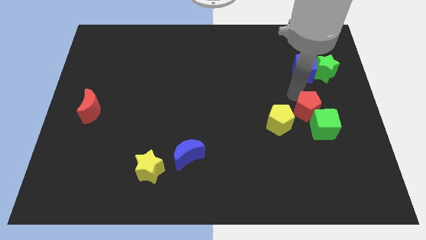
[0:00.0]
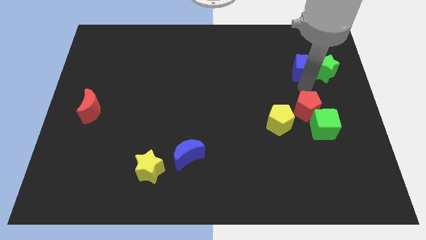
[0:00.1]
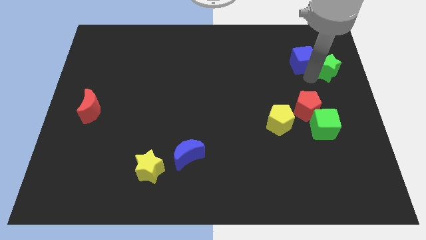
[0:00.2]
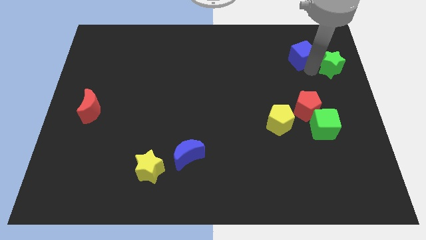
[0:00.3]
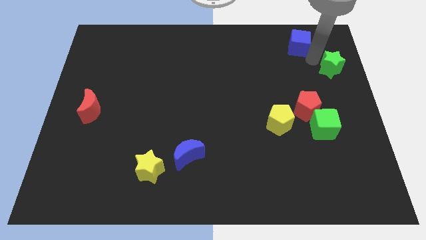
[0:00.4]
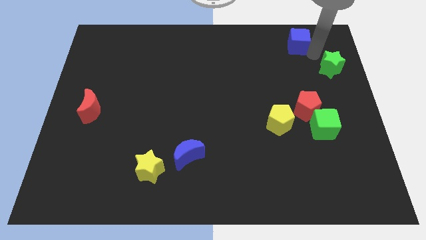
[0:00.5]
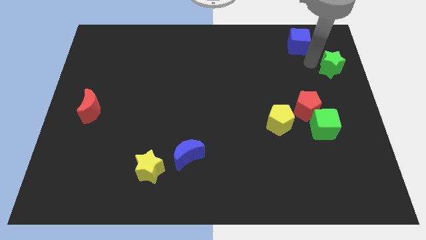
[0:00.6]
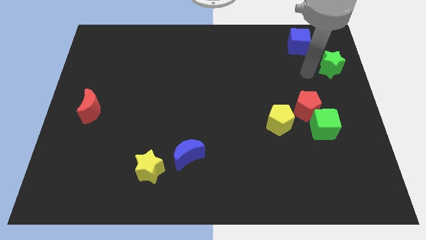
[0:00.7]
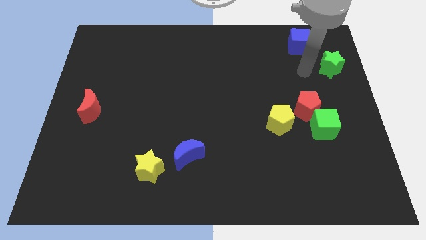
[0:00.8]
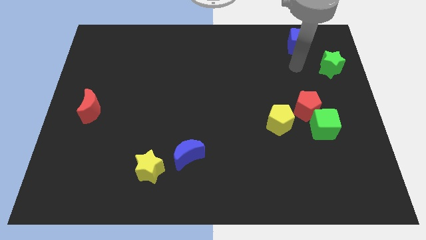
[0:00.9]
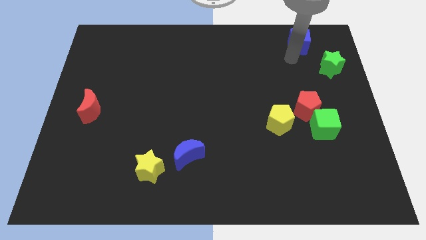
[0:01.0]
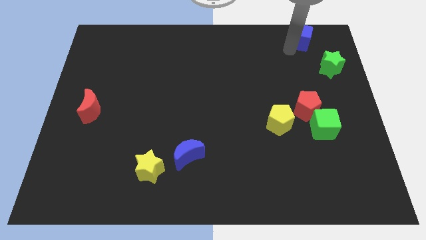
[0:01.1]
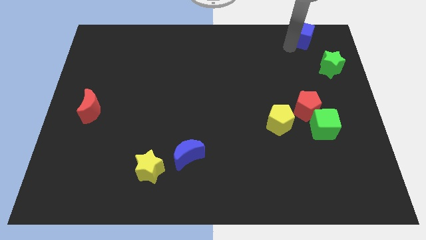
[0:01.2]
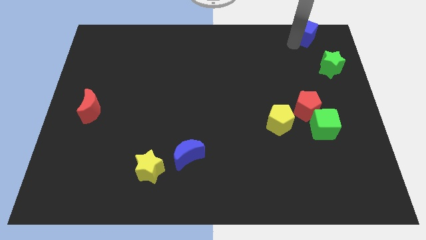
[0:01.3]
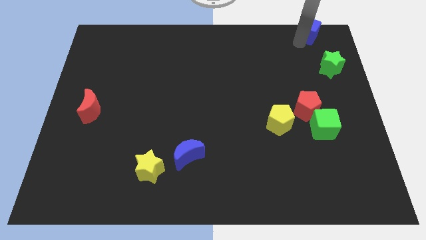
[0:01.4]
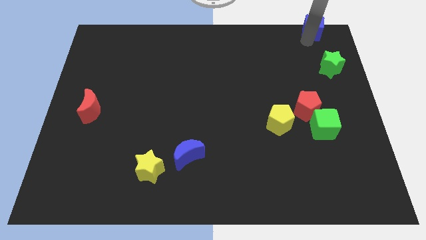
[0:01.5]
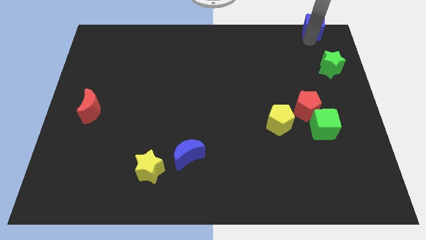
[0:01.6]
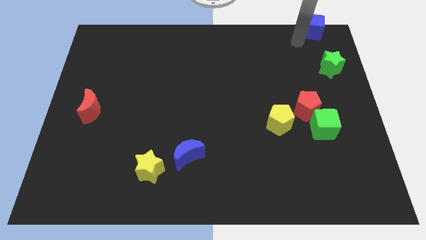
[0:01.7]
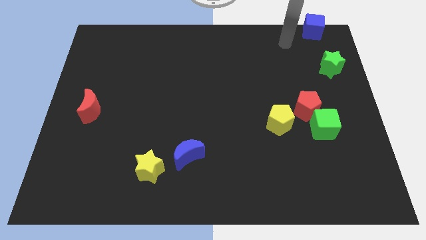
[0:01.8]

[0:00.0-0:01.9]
push the blue cube away from the green star

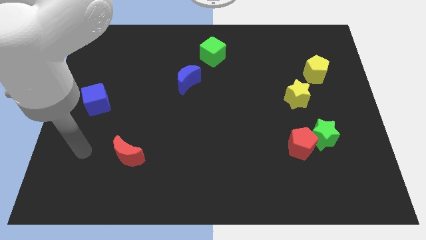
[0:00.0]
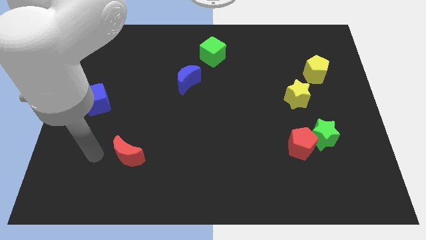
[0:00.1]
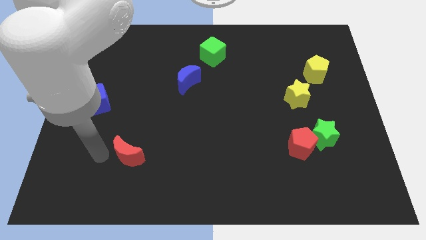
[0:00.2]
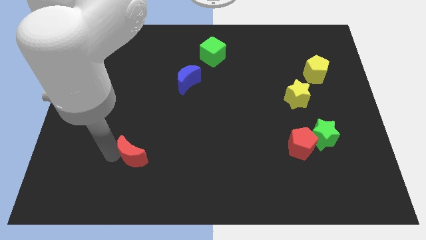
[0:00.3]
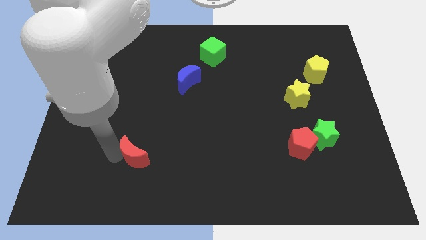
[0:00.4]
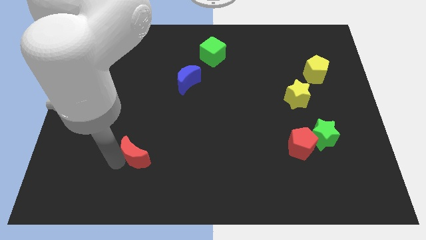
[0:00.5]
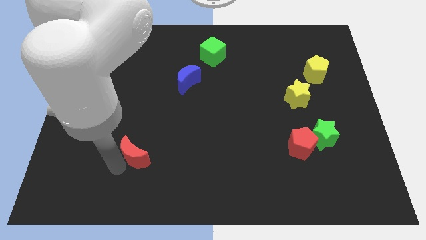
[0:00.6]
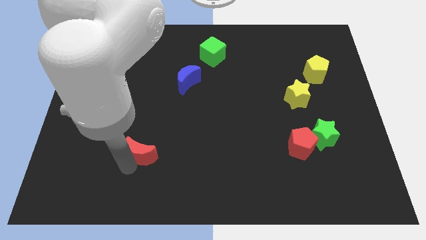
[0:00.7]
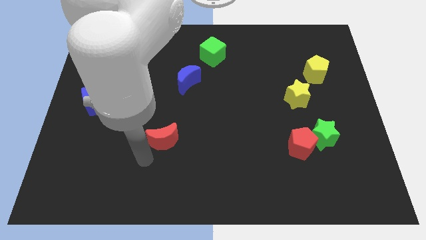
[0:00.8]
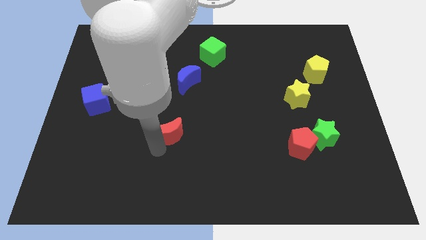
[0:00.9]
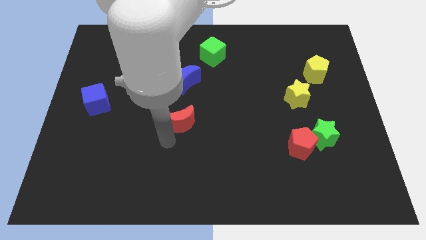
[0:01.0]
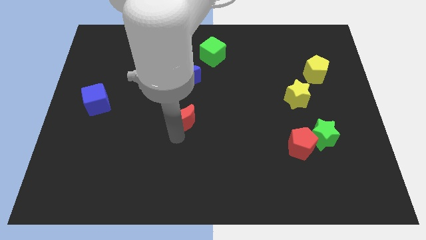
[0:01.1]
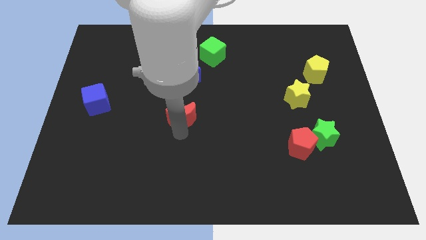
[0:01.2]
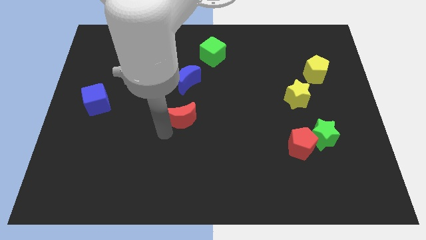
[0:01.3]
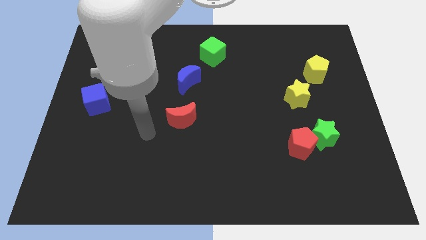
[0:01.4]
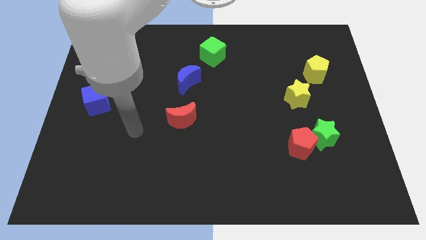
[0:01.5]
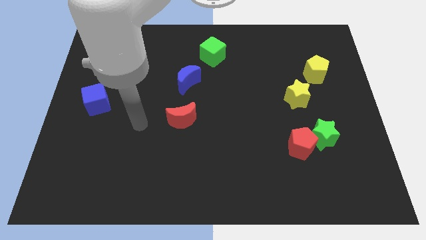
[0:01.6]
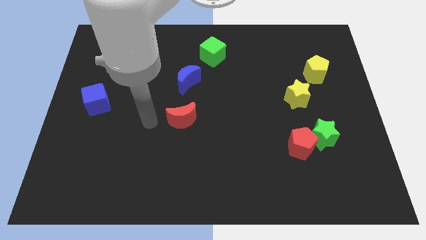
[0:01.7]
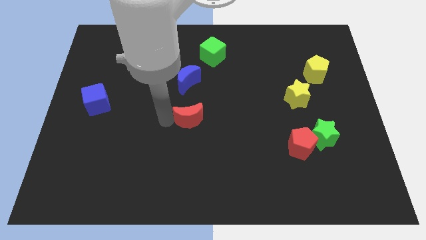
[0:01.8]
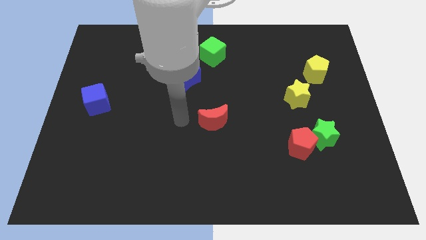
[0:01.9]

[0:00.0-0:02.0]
move the red crescent below the blue crescent

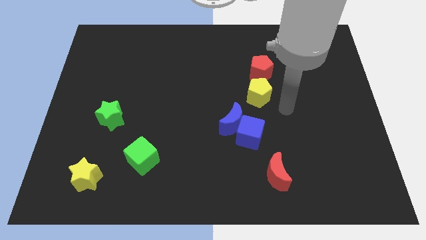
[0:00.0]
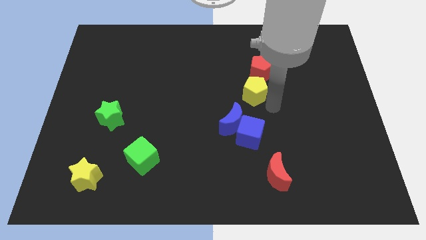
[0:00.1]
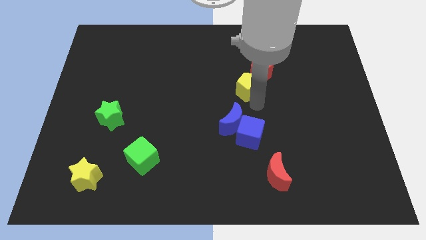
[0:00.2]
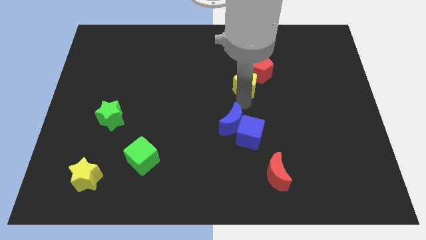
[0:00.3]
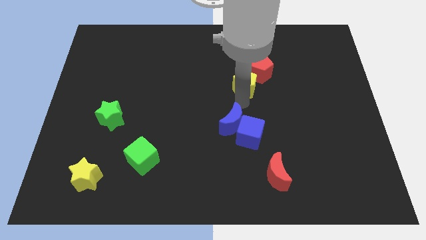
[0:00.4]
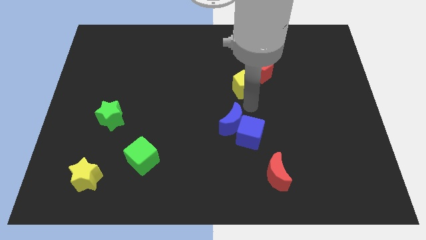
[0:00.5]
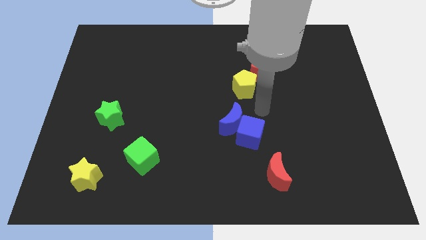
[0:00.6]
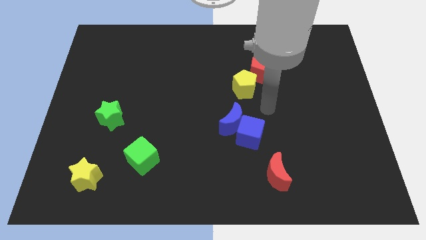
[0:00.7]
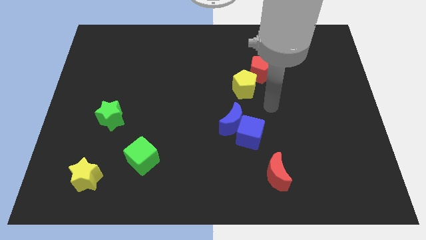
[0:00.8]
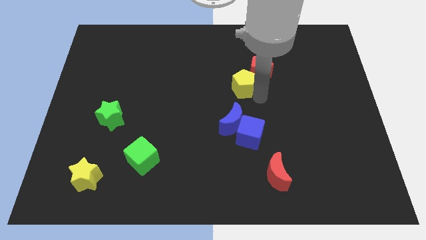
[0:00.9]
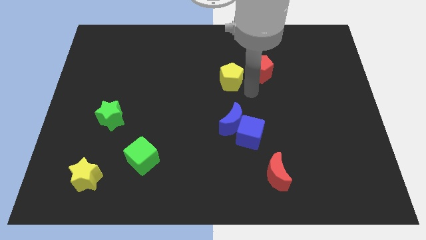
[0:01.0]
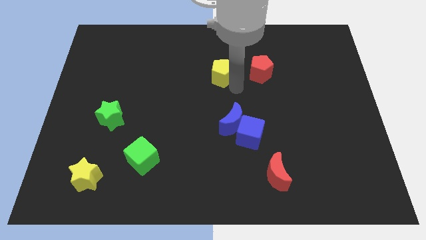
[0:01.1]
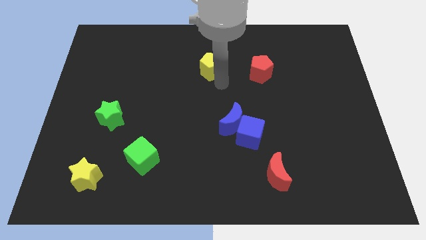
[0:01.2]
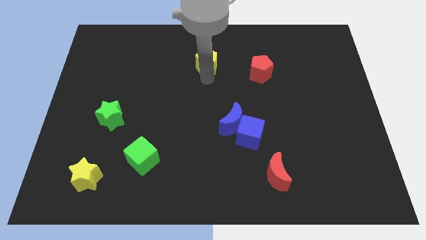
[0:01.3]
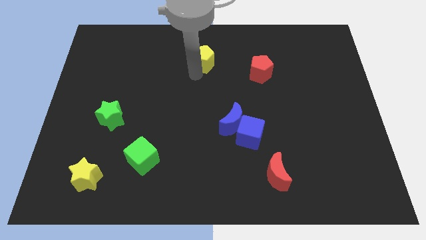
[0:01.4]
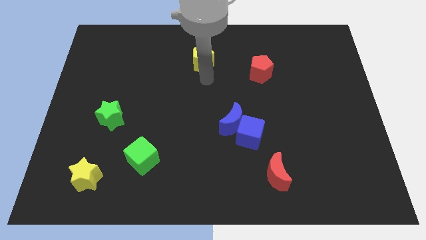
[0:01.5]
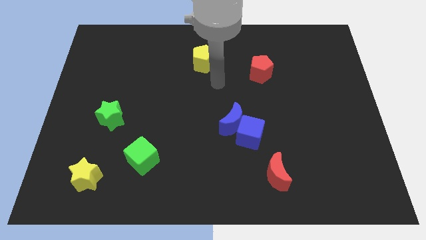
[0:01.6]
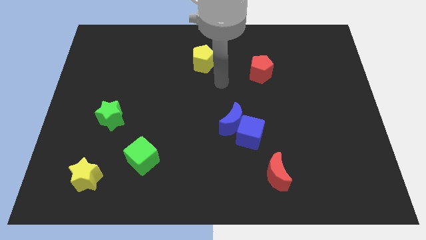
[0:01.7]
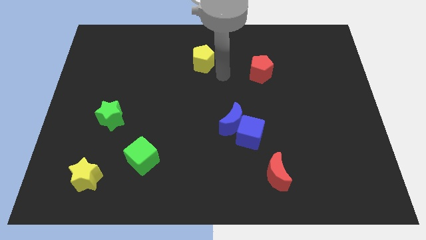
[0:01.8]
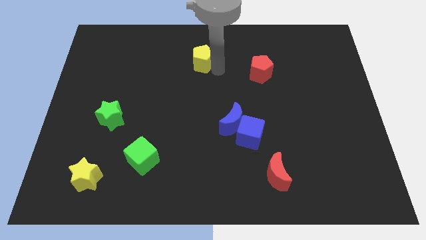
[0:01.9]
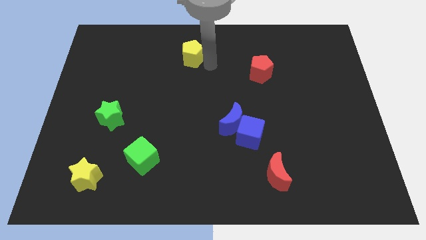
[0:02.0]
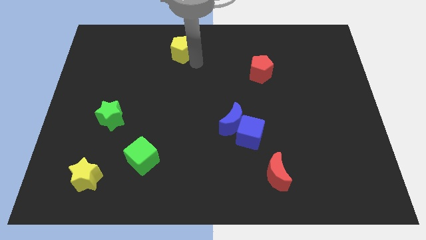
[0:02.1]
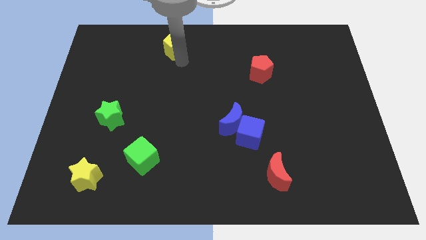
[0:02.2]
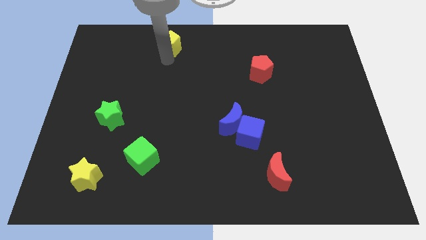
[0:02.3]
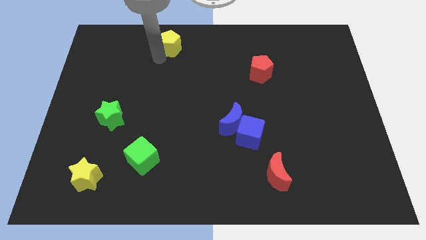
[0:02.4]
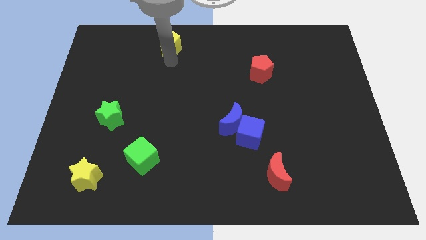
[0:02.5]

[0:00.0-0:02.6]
move yellow pentagon to the top left

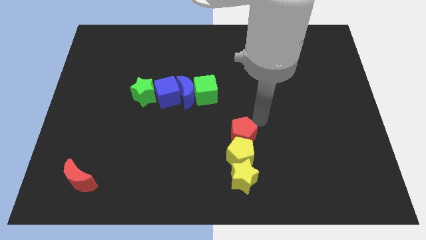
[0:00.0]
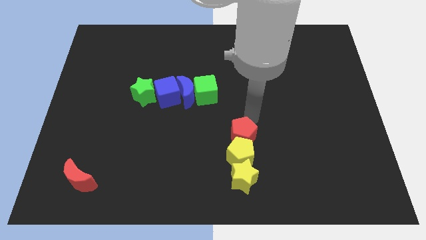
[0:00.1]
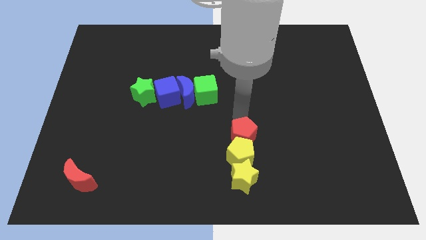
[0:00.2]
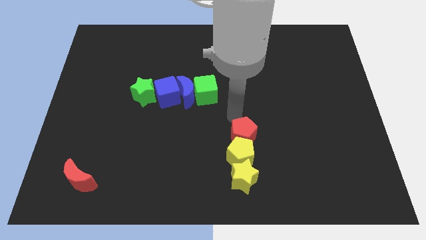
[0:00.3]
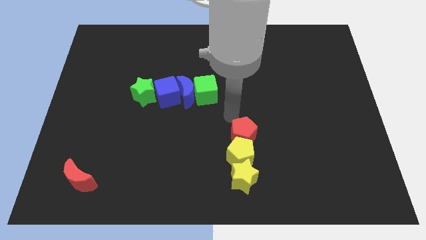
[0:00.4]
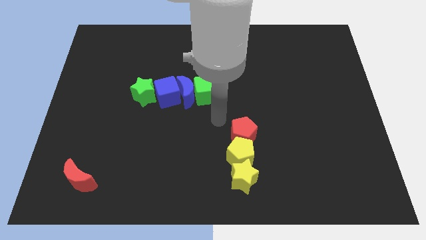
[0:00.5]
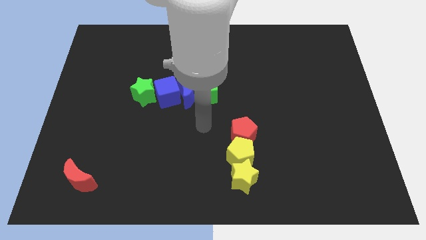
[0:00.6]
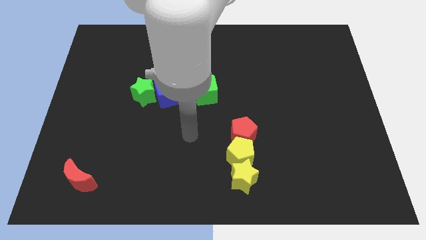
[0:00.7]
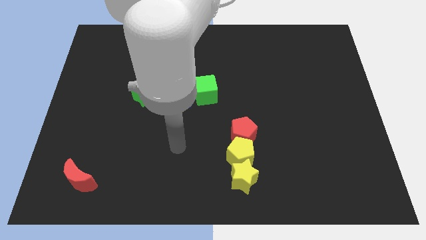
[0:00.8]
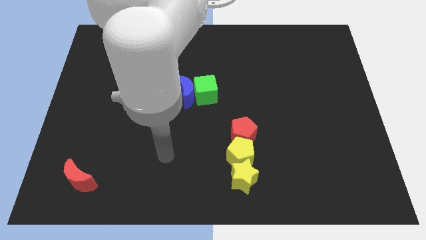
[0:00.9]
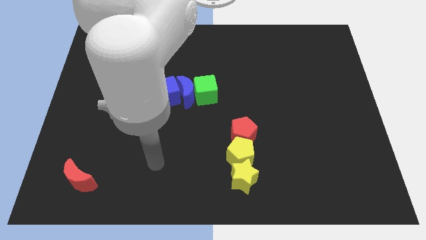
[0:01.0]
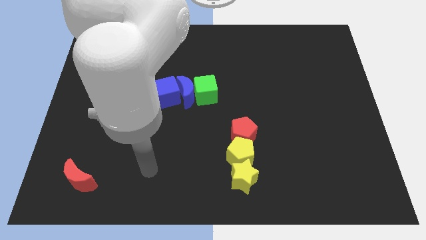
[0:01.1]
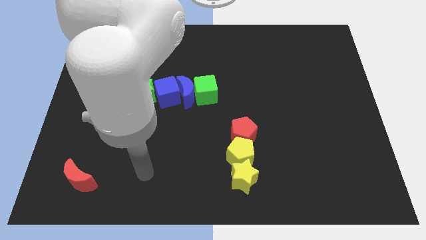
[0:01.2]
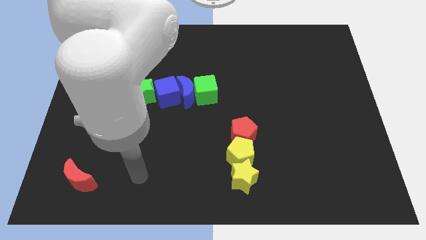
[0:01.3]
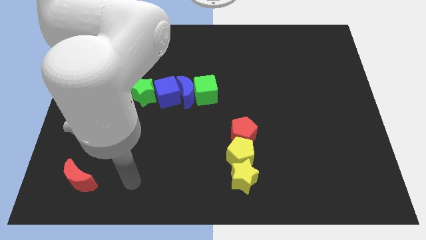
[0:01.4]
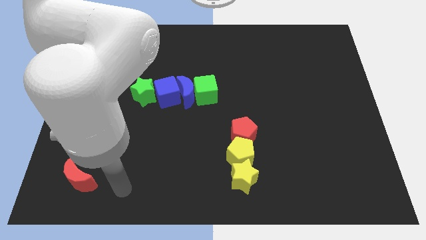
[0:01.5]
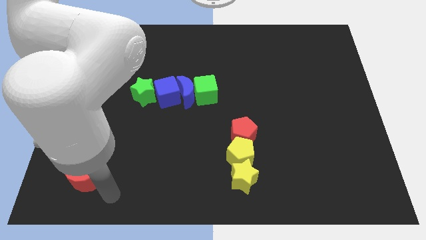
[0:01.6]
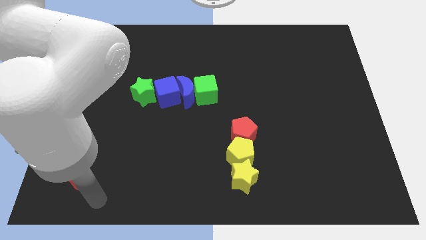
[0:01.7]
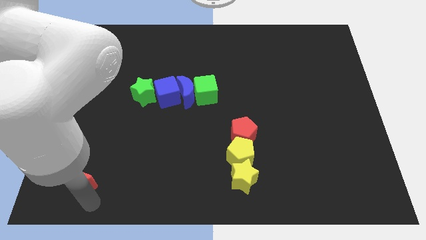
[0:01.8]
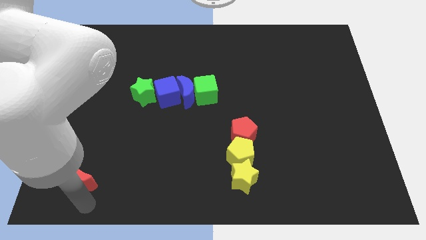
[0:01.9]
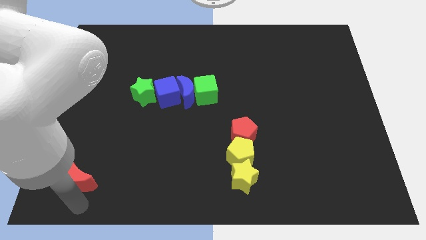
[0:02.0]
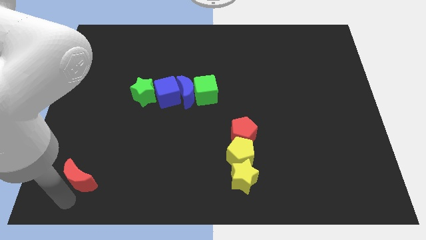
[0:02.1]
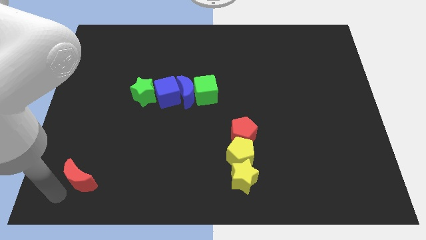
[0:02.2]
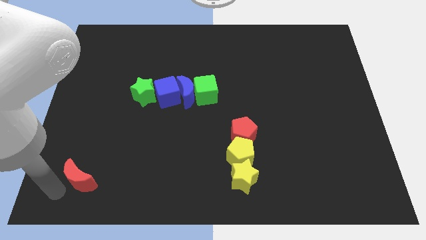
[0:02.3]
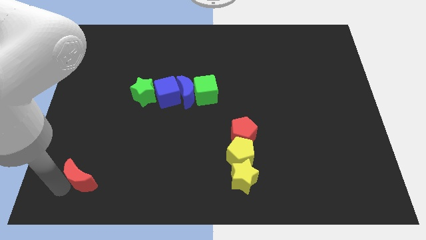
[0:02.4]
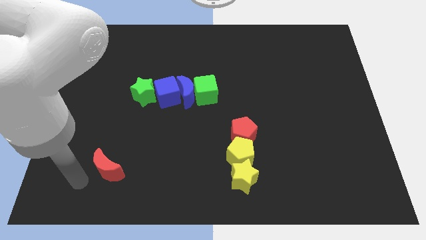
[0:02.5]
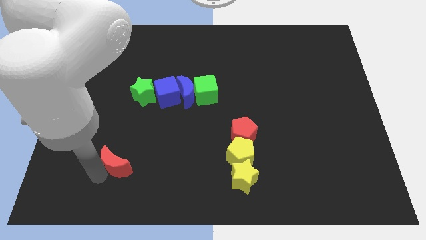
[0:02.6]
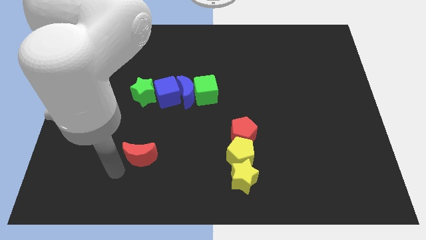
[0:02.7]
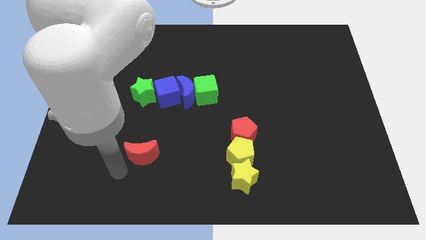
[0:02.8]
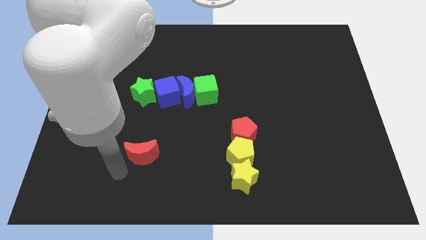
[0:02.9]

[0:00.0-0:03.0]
move the red moon parallel to the yellow pentagon
